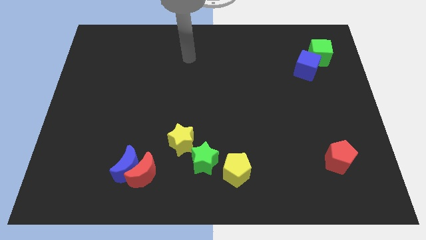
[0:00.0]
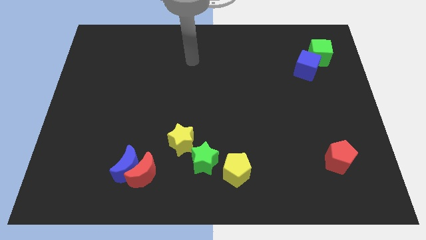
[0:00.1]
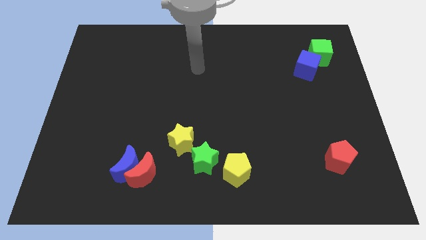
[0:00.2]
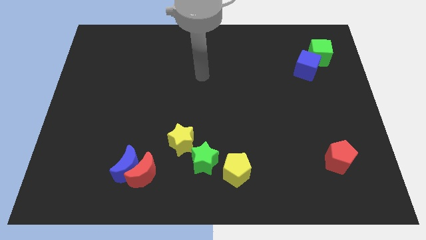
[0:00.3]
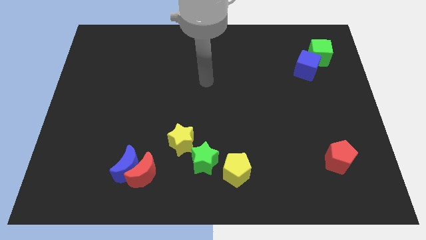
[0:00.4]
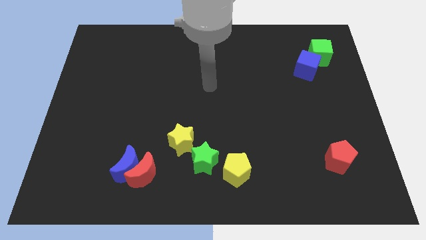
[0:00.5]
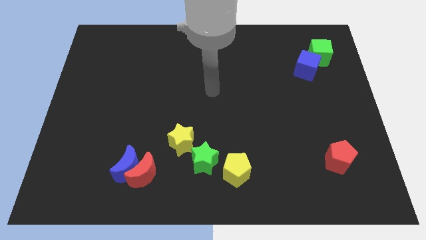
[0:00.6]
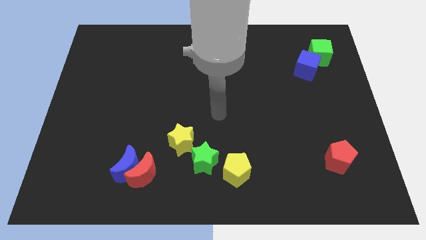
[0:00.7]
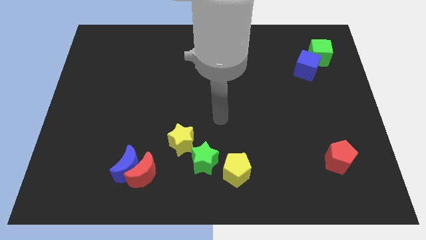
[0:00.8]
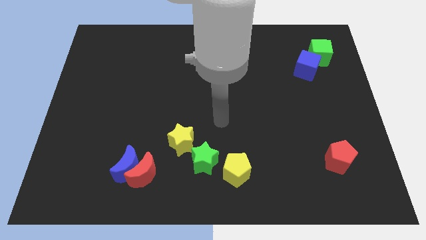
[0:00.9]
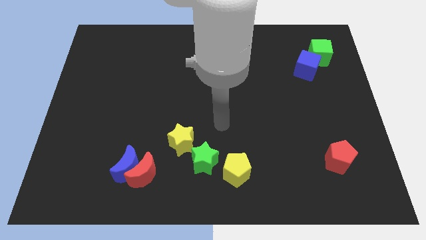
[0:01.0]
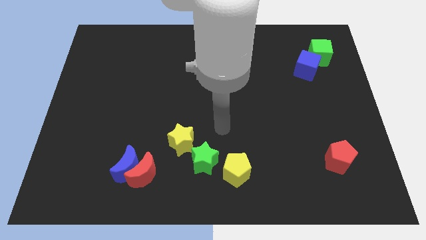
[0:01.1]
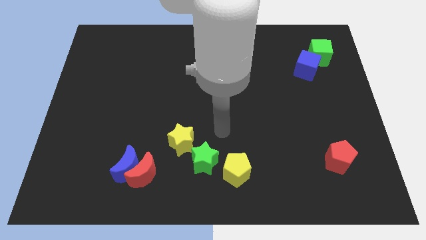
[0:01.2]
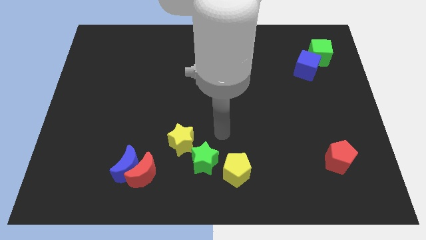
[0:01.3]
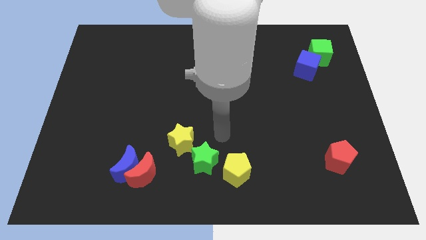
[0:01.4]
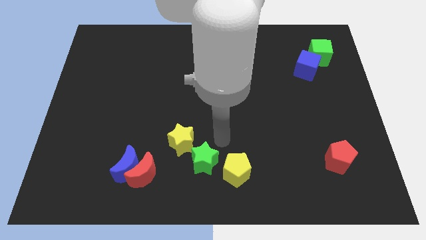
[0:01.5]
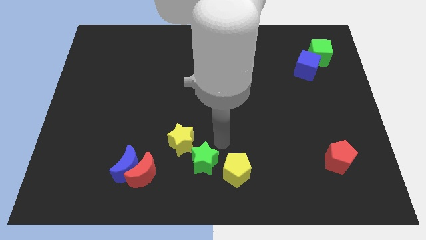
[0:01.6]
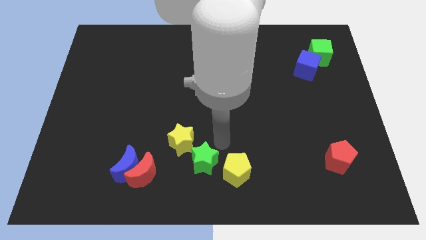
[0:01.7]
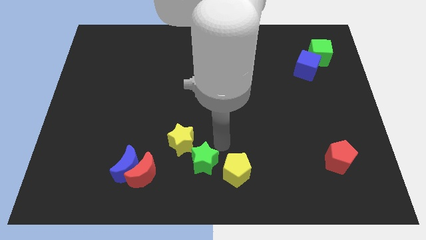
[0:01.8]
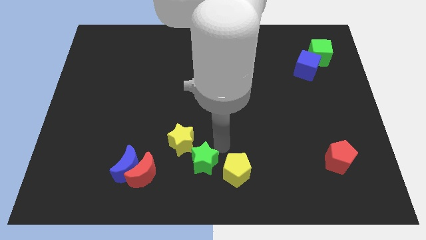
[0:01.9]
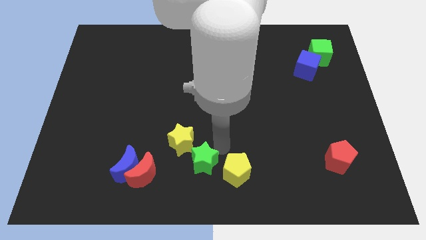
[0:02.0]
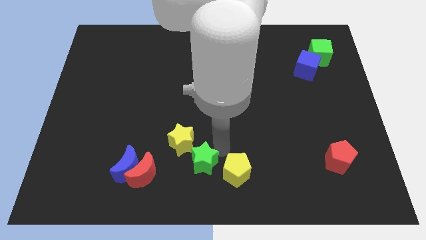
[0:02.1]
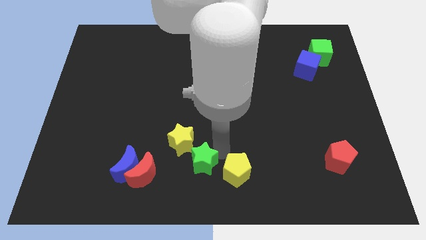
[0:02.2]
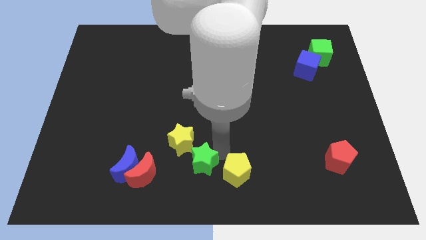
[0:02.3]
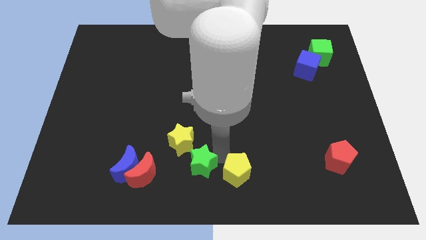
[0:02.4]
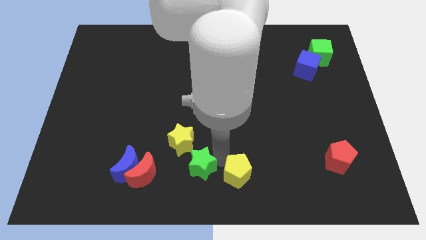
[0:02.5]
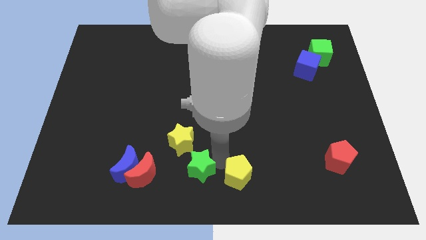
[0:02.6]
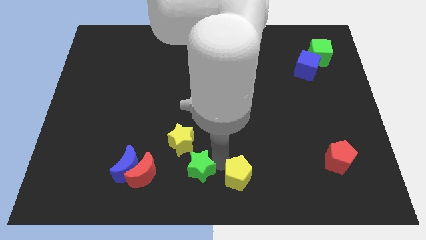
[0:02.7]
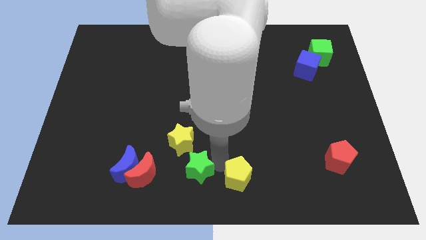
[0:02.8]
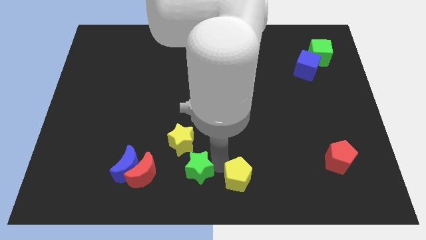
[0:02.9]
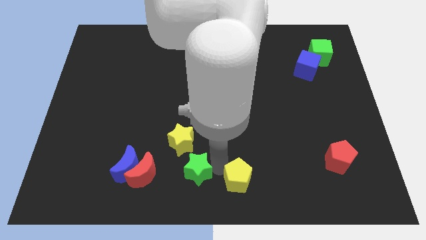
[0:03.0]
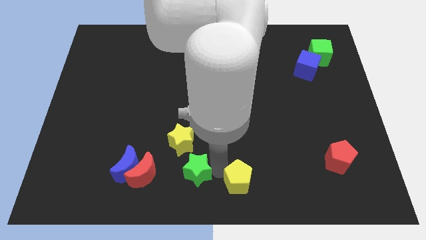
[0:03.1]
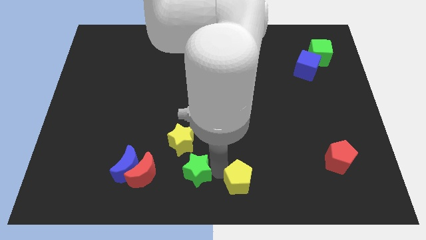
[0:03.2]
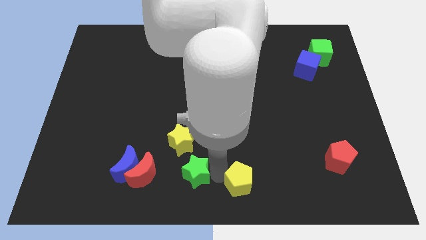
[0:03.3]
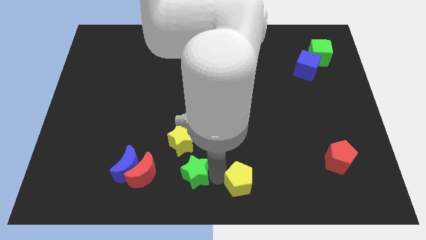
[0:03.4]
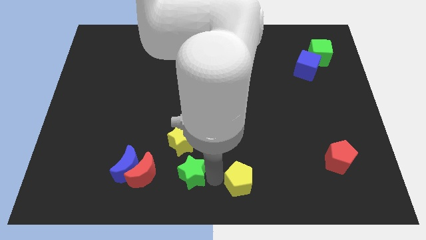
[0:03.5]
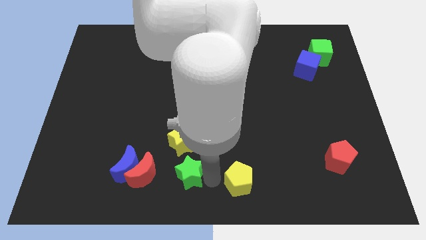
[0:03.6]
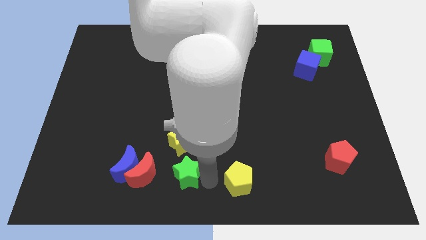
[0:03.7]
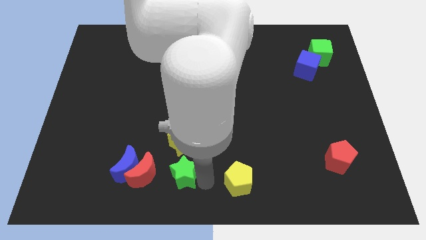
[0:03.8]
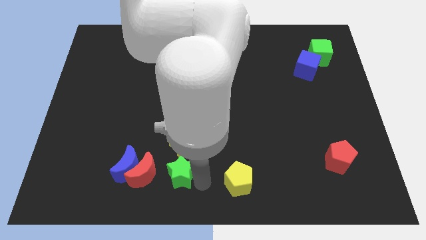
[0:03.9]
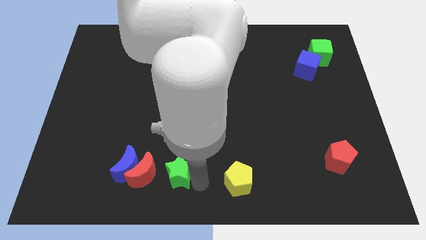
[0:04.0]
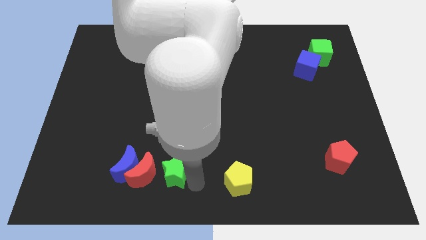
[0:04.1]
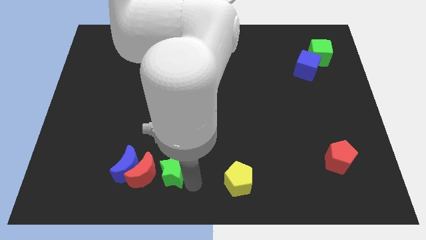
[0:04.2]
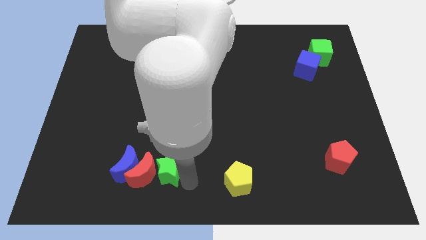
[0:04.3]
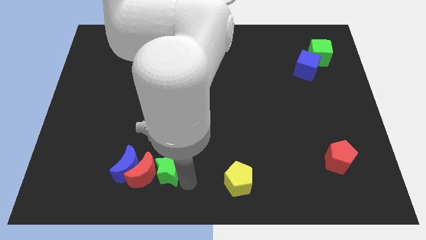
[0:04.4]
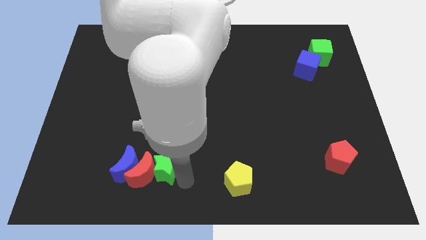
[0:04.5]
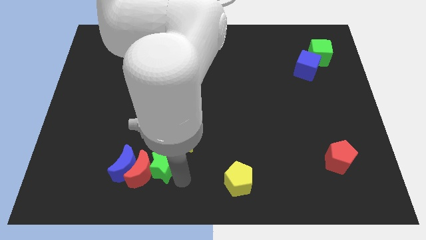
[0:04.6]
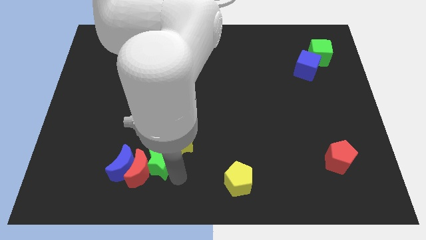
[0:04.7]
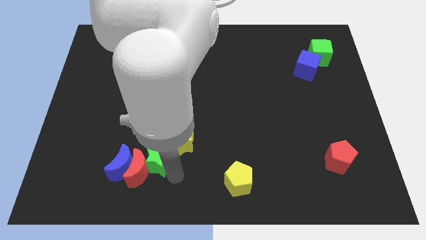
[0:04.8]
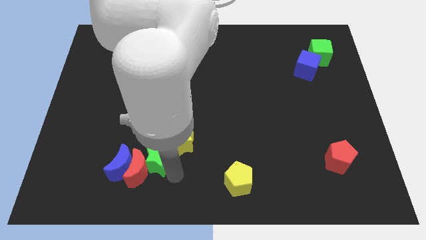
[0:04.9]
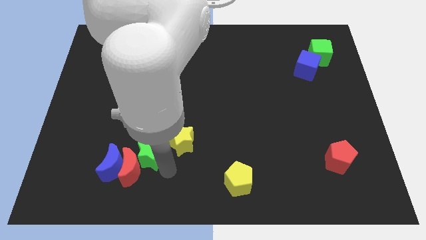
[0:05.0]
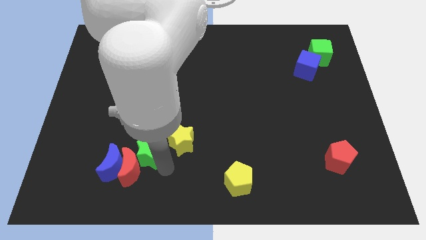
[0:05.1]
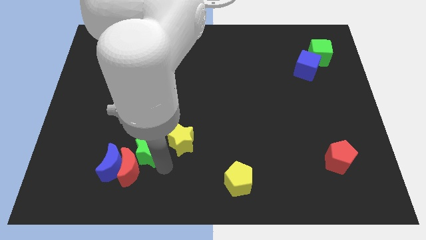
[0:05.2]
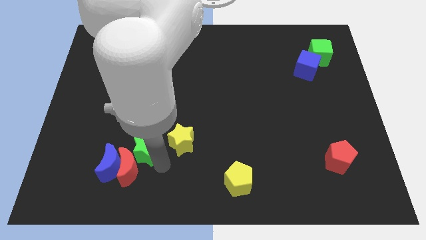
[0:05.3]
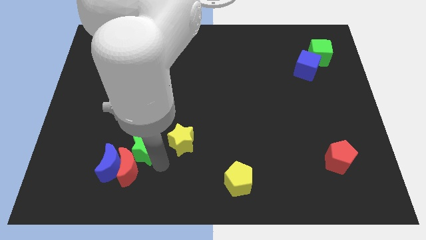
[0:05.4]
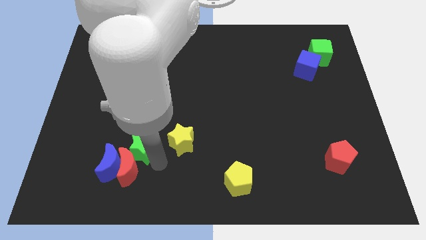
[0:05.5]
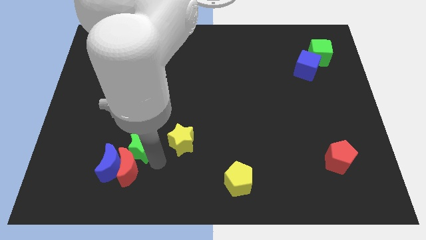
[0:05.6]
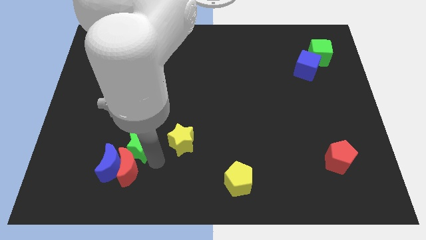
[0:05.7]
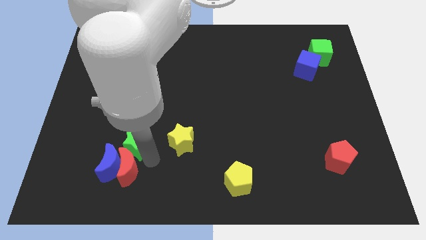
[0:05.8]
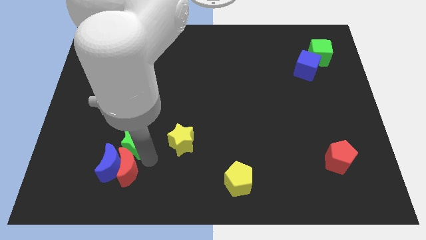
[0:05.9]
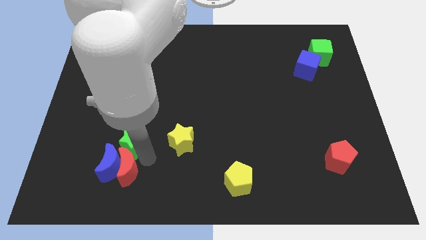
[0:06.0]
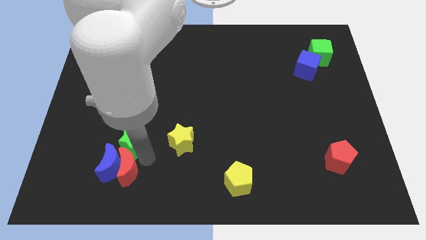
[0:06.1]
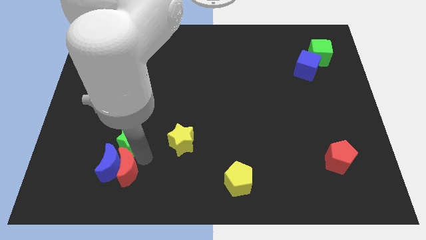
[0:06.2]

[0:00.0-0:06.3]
put the green star next to the blue moon

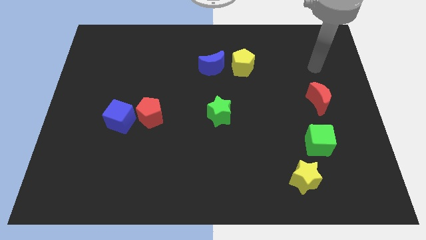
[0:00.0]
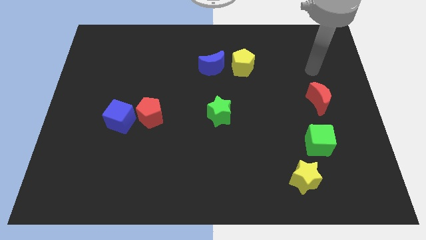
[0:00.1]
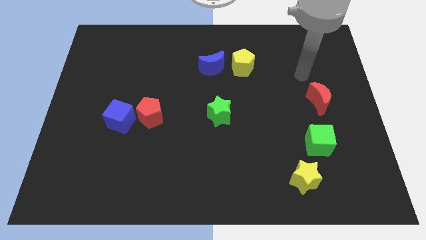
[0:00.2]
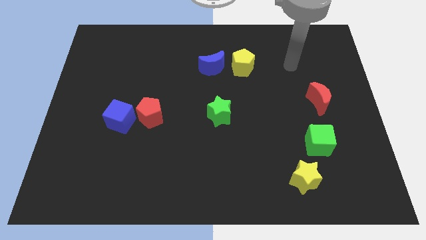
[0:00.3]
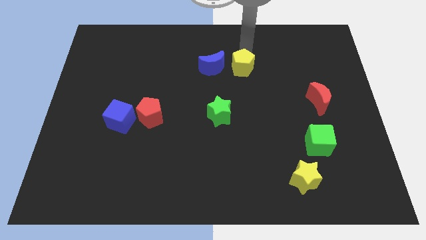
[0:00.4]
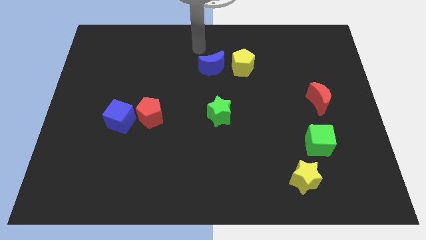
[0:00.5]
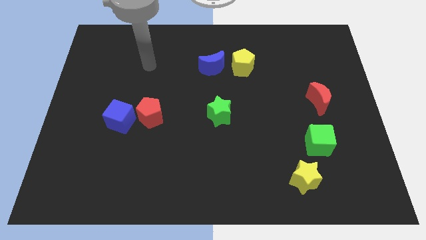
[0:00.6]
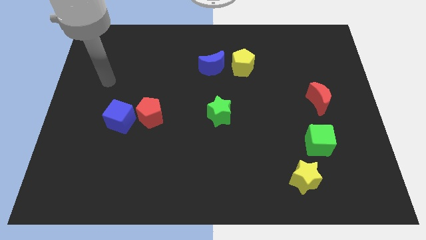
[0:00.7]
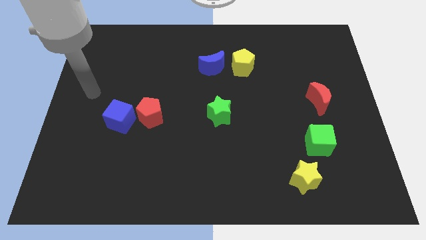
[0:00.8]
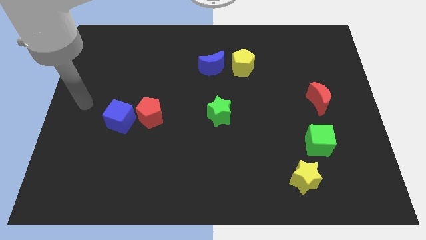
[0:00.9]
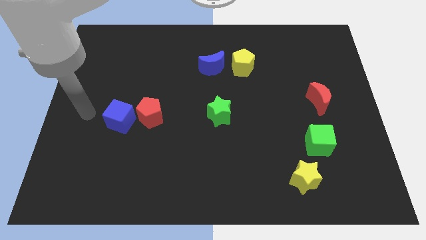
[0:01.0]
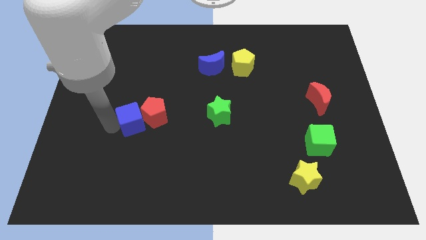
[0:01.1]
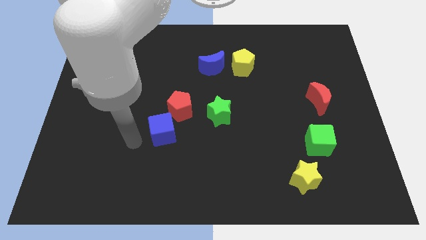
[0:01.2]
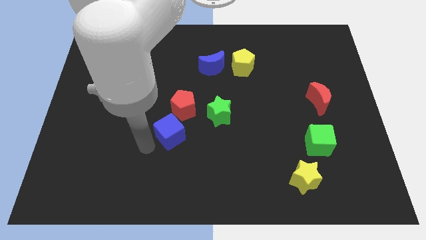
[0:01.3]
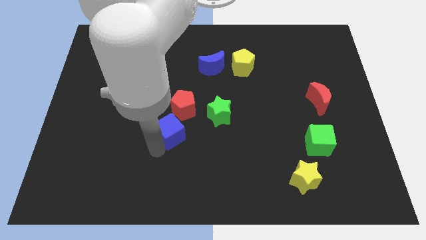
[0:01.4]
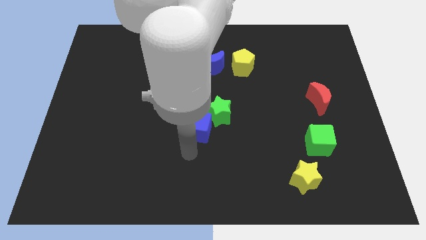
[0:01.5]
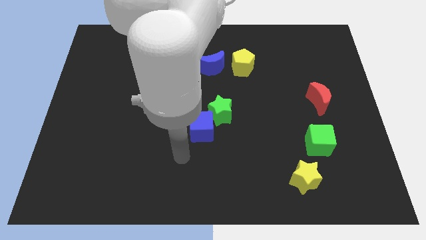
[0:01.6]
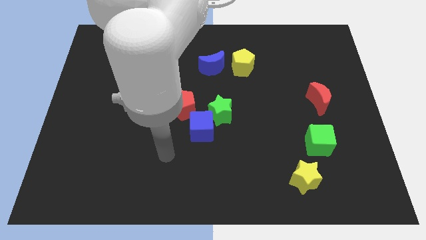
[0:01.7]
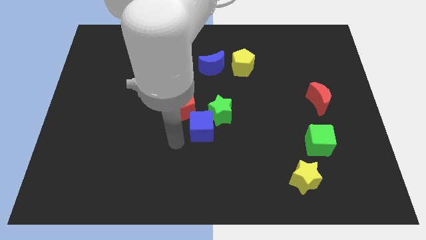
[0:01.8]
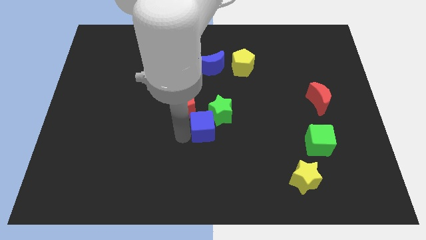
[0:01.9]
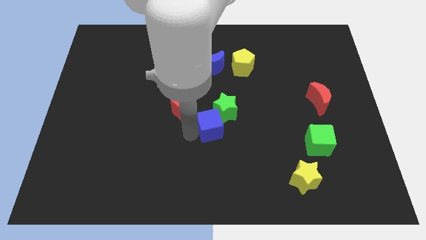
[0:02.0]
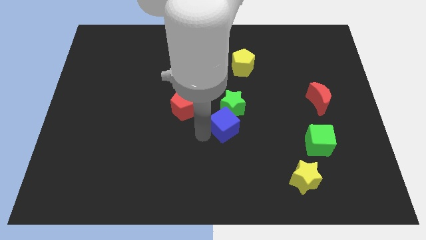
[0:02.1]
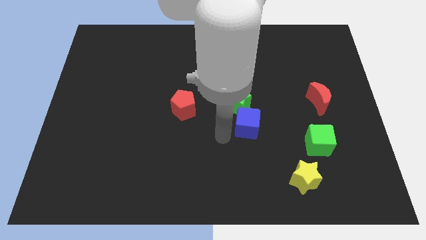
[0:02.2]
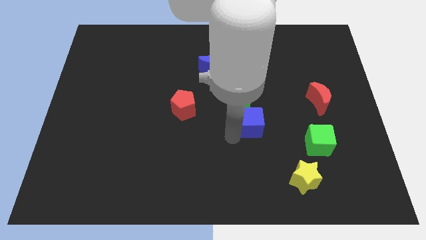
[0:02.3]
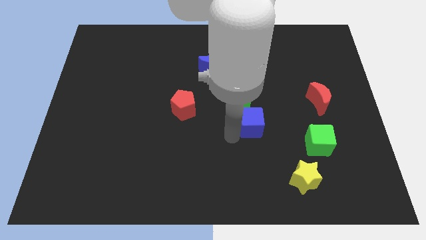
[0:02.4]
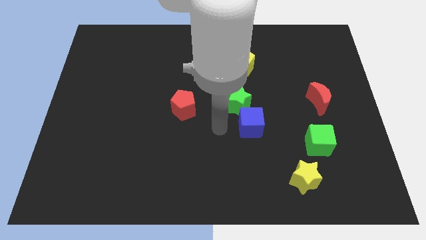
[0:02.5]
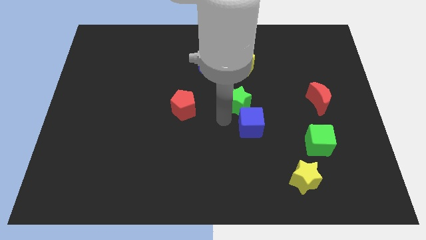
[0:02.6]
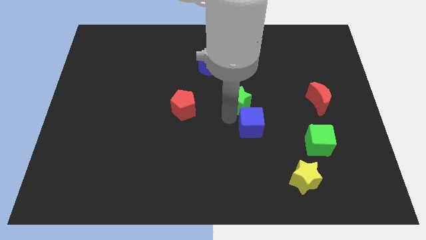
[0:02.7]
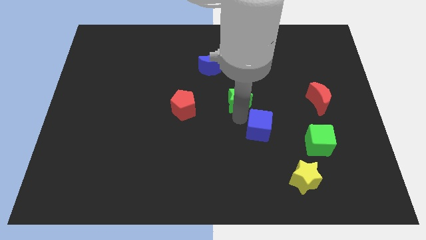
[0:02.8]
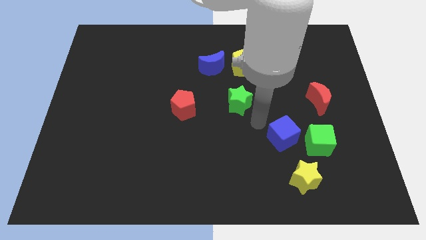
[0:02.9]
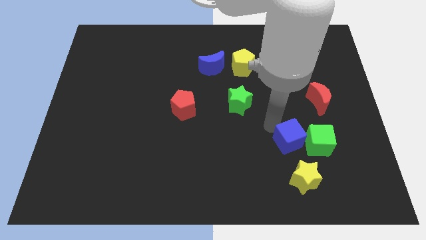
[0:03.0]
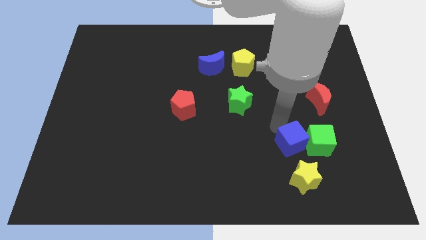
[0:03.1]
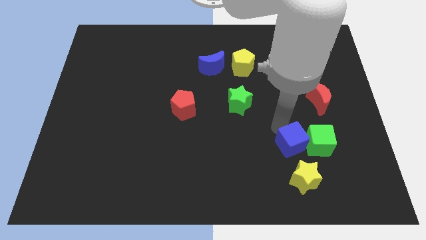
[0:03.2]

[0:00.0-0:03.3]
move the blue cube next to the green cube
